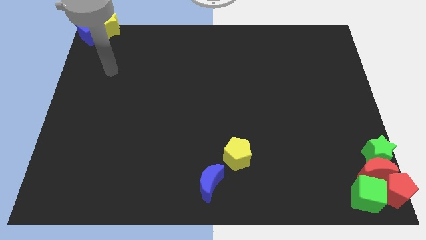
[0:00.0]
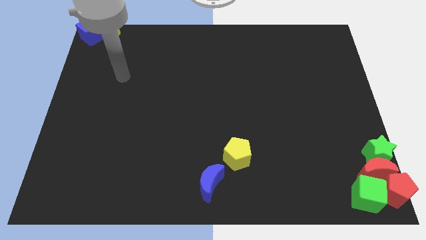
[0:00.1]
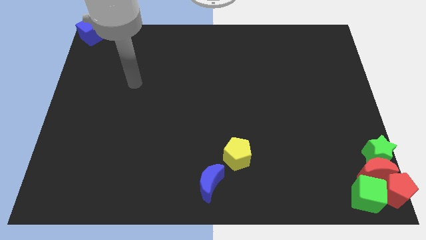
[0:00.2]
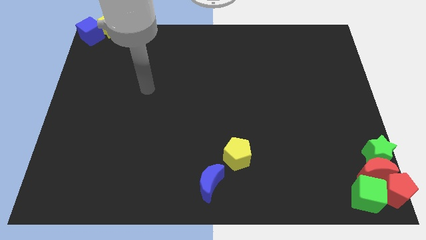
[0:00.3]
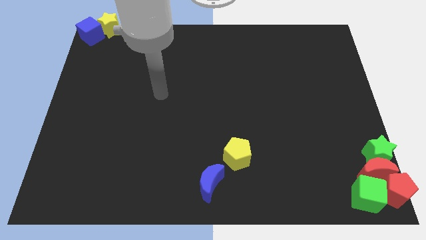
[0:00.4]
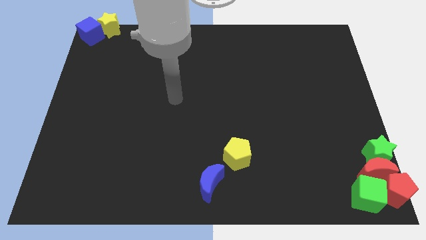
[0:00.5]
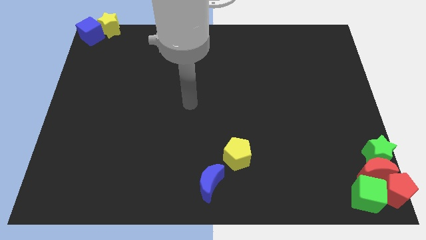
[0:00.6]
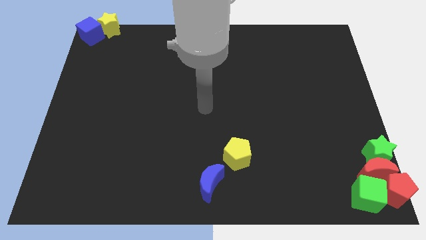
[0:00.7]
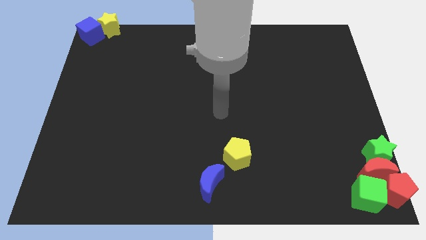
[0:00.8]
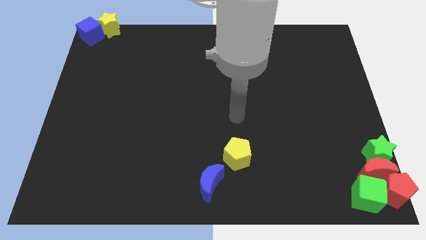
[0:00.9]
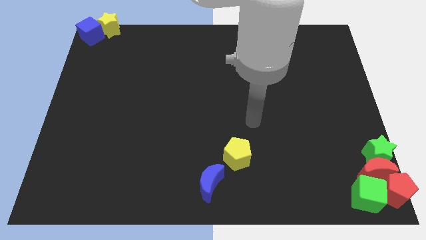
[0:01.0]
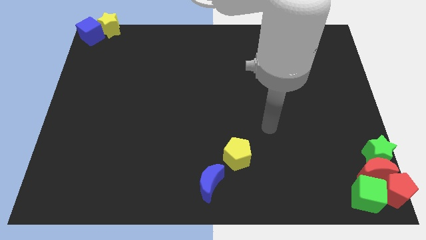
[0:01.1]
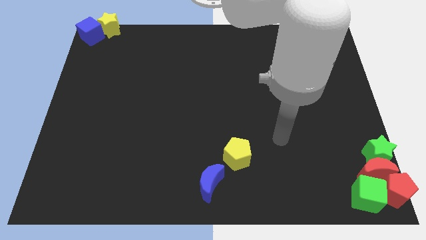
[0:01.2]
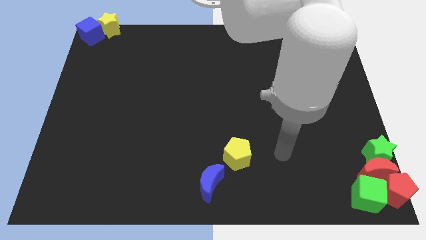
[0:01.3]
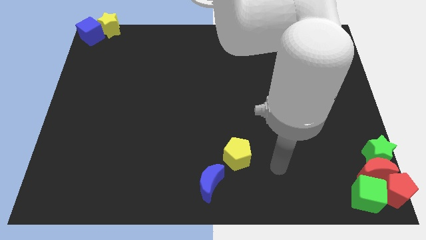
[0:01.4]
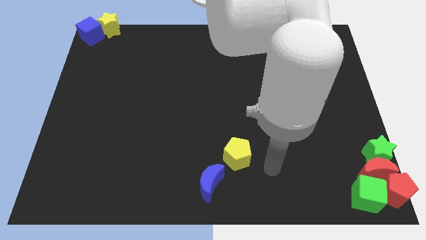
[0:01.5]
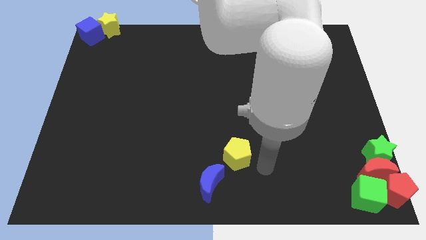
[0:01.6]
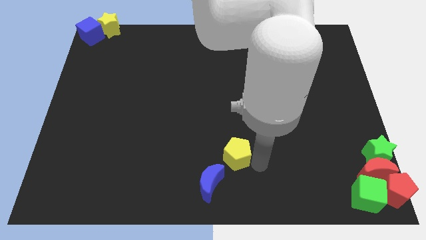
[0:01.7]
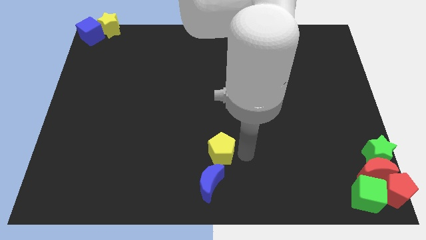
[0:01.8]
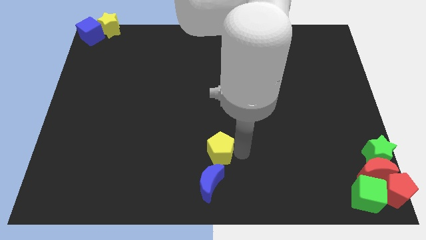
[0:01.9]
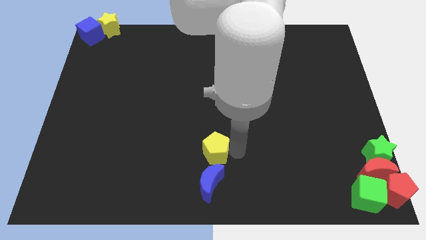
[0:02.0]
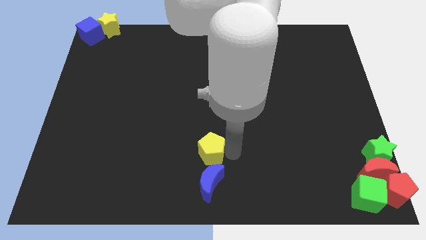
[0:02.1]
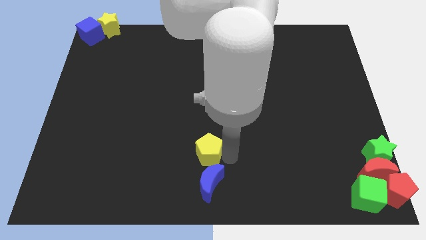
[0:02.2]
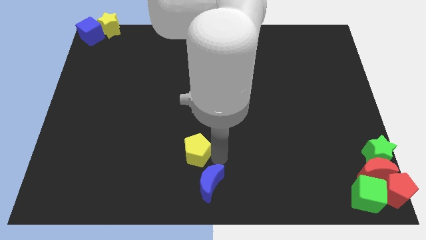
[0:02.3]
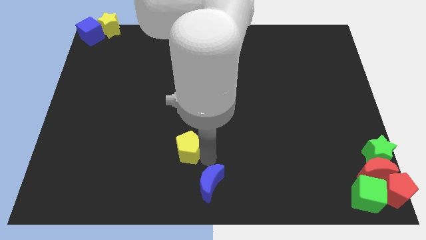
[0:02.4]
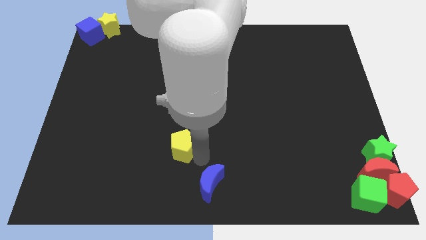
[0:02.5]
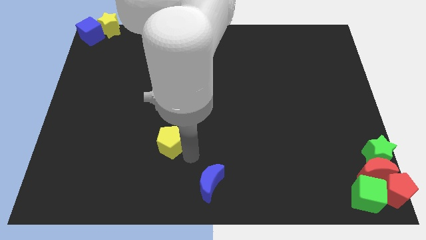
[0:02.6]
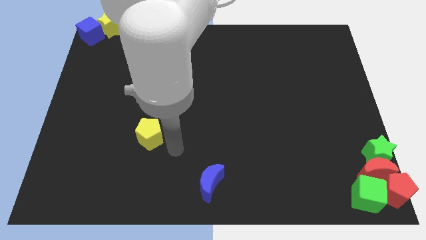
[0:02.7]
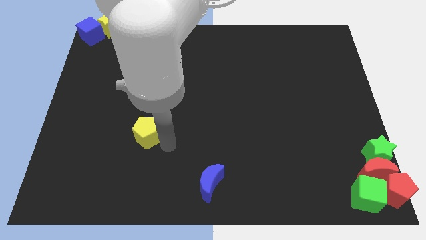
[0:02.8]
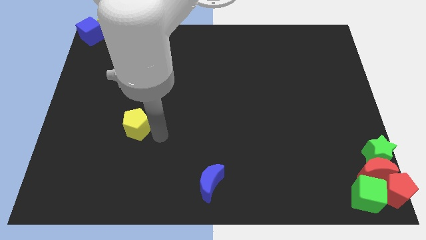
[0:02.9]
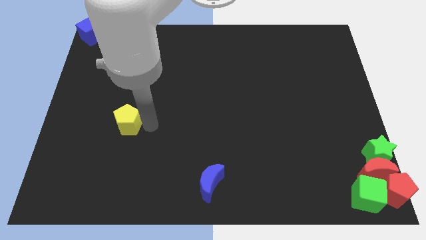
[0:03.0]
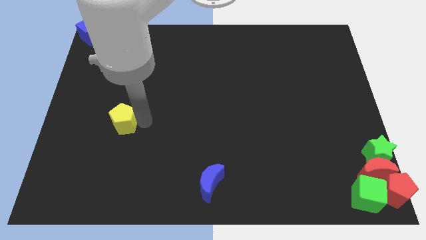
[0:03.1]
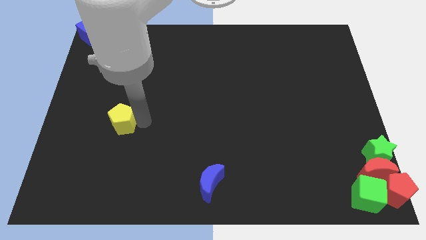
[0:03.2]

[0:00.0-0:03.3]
push the yellow pentagon away from the blue crescent

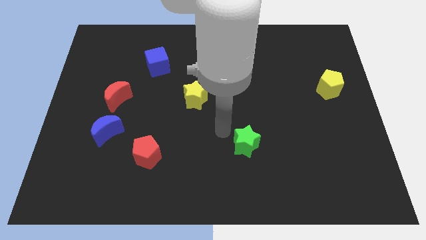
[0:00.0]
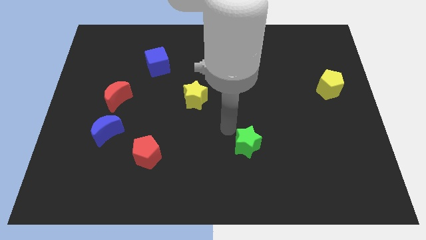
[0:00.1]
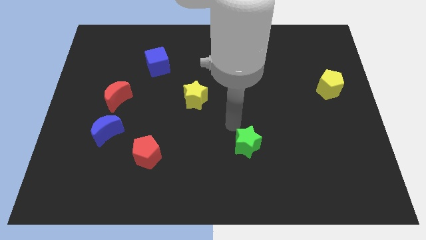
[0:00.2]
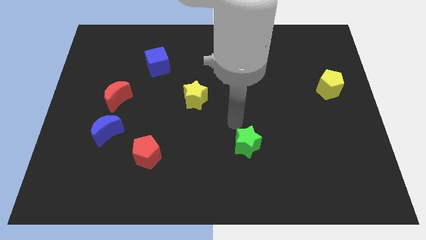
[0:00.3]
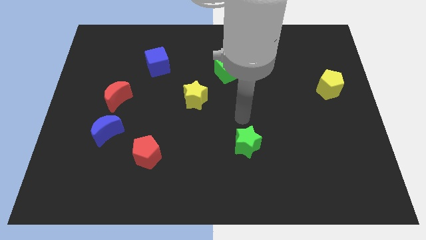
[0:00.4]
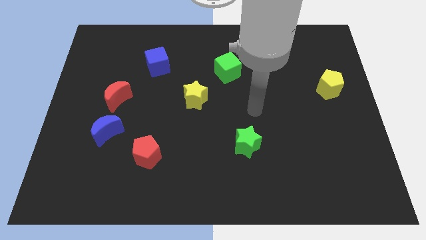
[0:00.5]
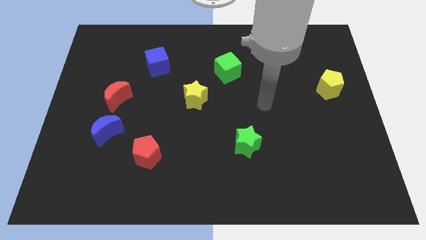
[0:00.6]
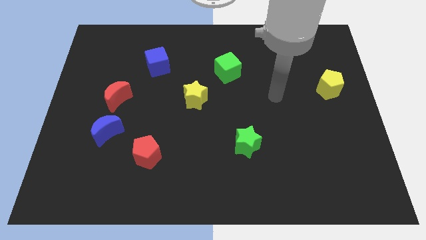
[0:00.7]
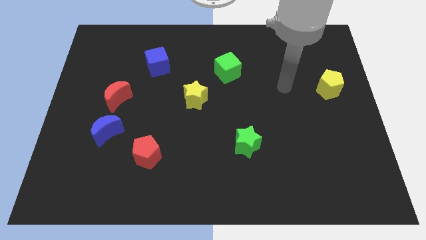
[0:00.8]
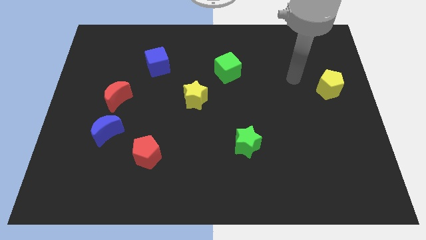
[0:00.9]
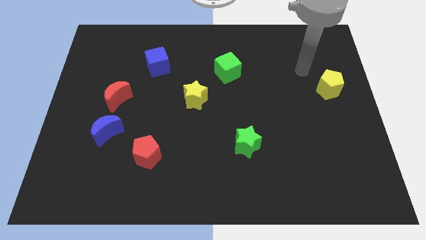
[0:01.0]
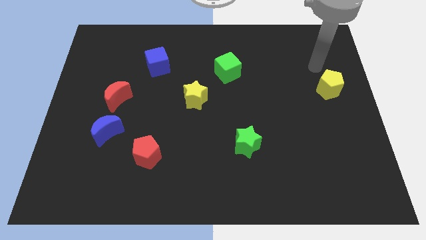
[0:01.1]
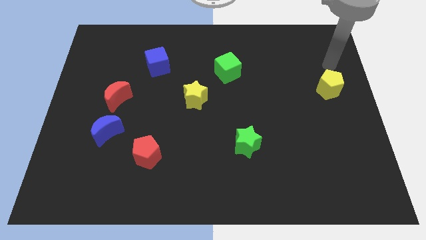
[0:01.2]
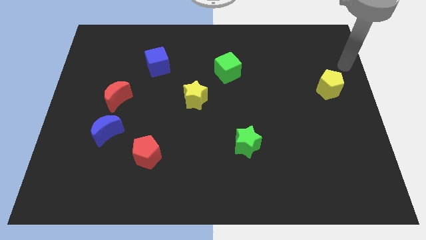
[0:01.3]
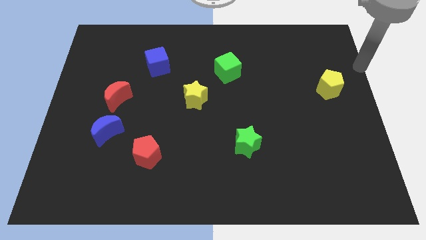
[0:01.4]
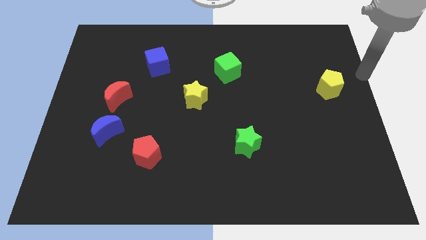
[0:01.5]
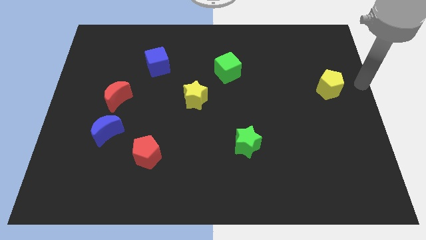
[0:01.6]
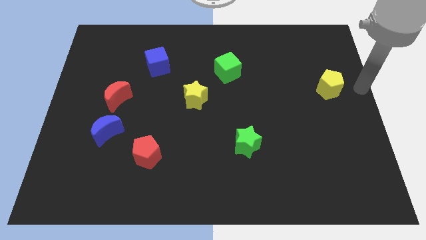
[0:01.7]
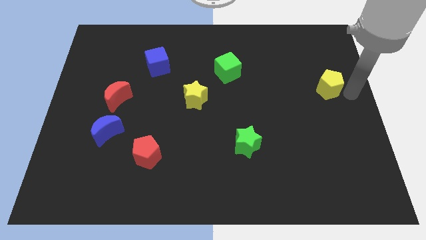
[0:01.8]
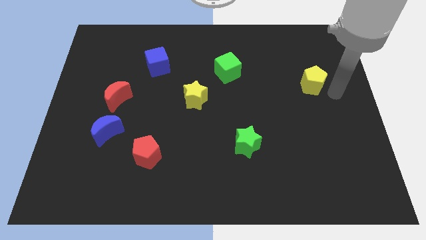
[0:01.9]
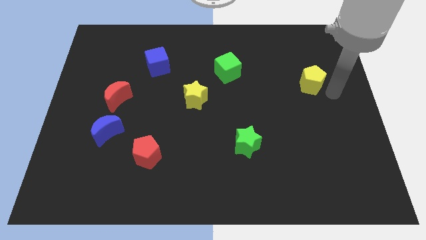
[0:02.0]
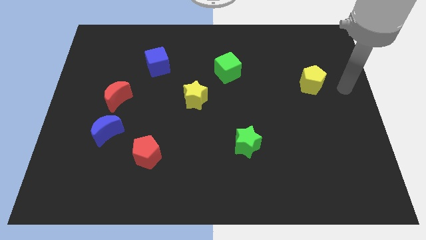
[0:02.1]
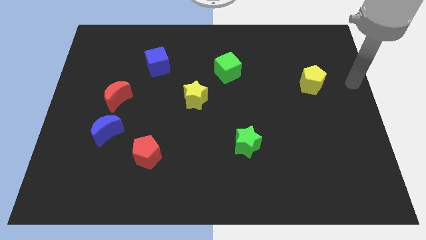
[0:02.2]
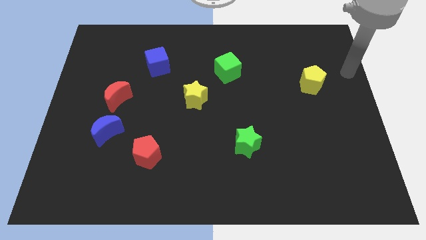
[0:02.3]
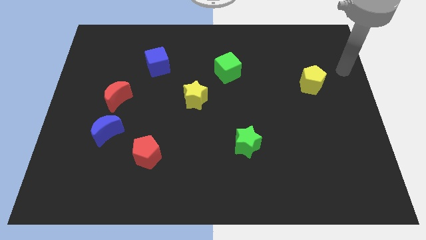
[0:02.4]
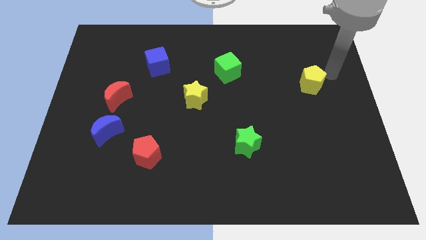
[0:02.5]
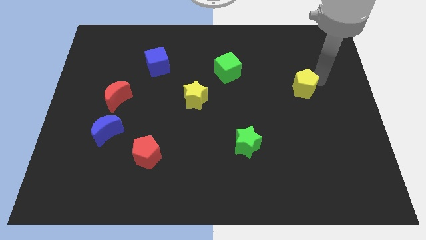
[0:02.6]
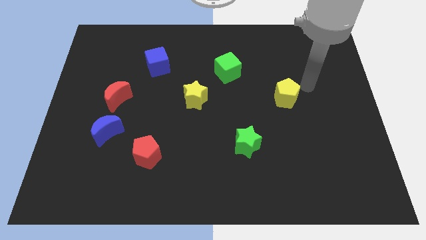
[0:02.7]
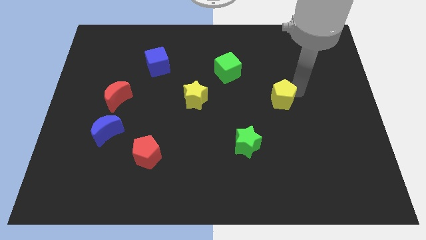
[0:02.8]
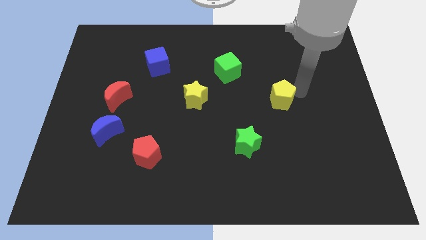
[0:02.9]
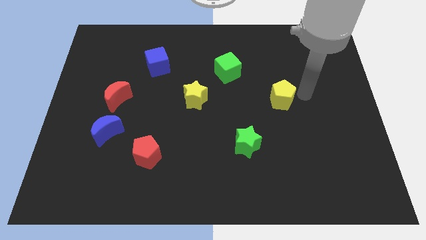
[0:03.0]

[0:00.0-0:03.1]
place the yellow pentagon horizontally to the right side of the yellow star

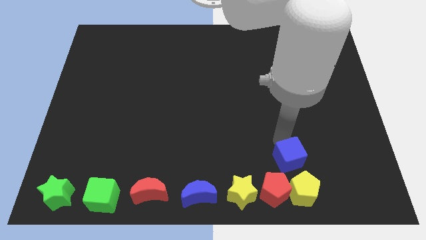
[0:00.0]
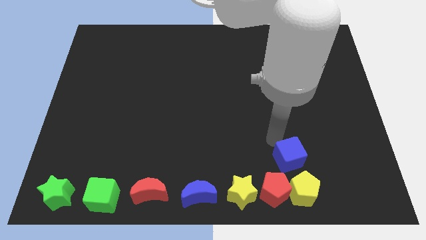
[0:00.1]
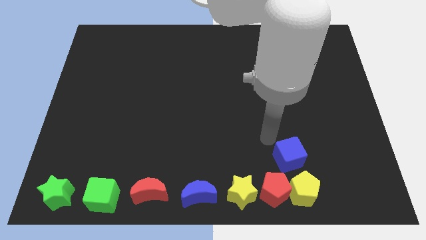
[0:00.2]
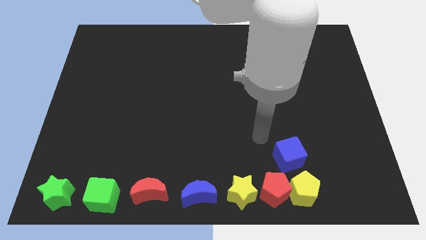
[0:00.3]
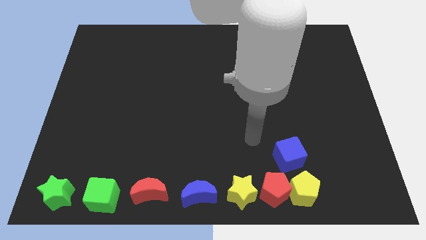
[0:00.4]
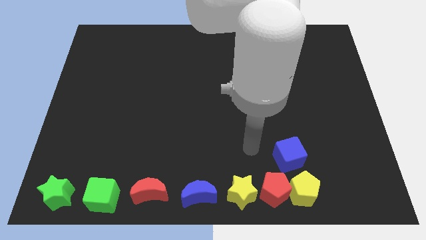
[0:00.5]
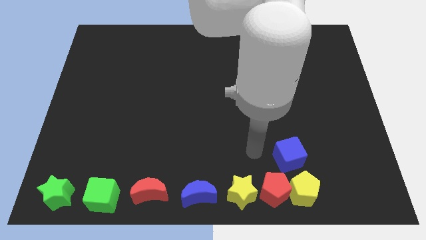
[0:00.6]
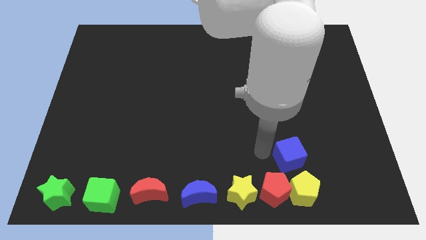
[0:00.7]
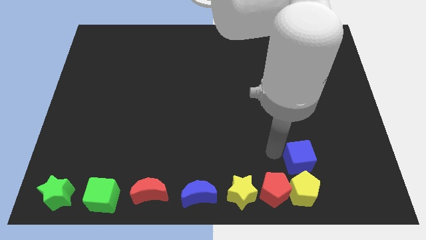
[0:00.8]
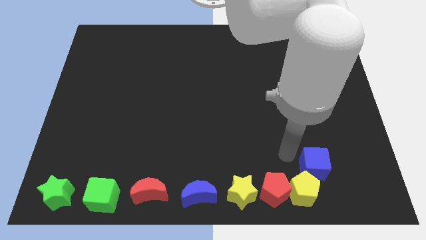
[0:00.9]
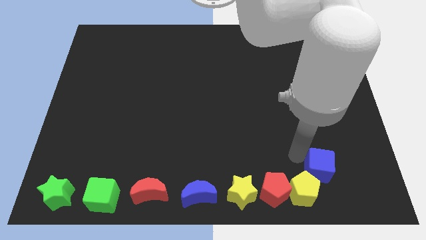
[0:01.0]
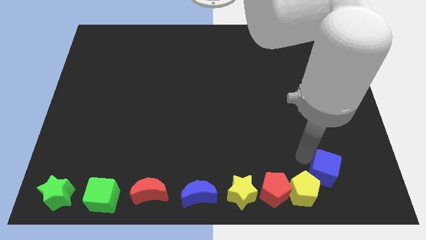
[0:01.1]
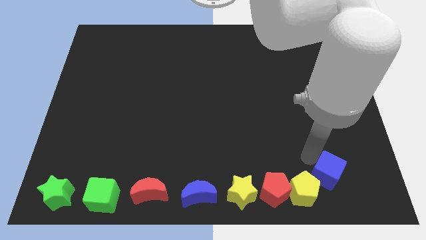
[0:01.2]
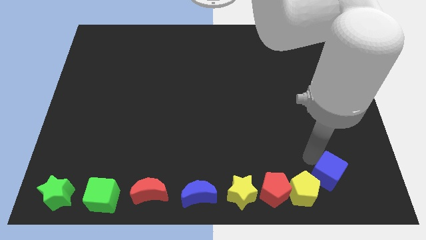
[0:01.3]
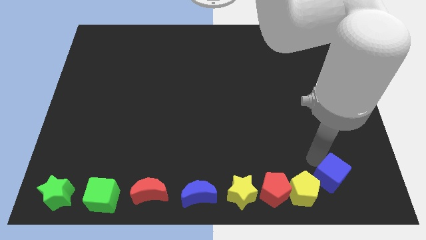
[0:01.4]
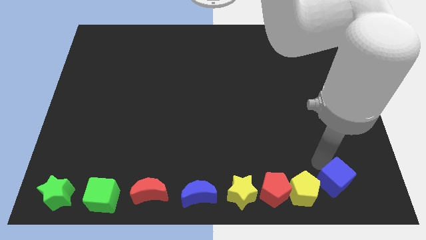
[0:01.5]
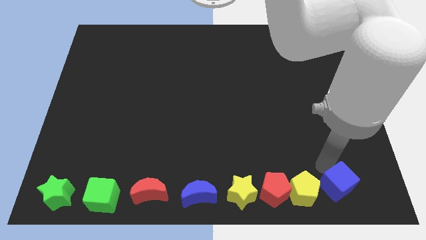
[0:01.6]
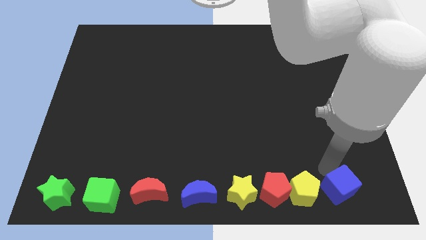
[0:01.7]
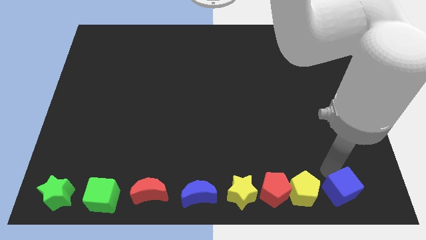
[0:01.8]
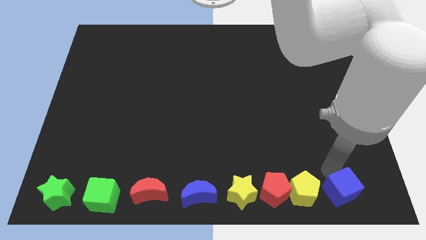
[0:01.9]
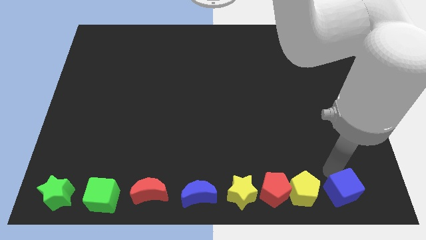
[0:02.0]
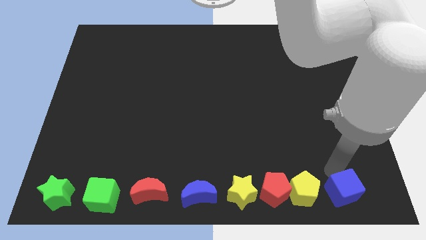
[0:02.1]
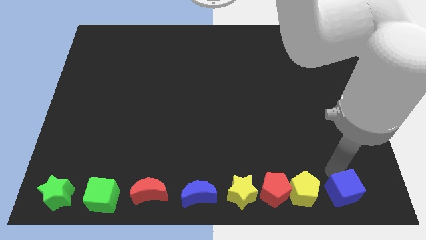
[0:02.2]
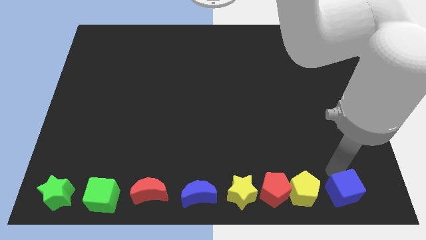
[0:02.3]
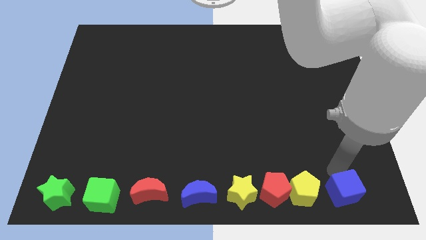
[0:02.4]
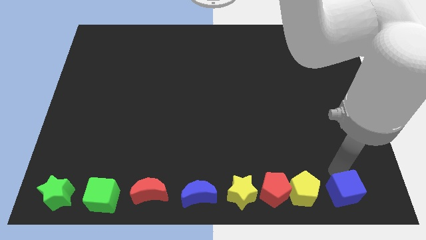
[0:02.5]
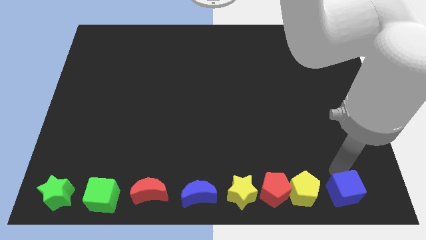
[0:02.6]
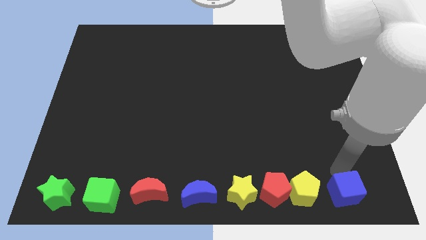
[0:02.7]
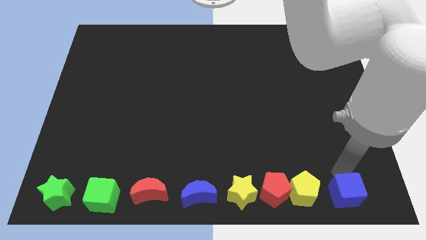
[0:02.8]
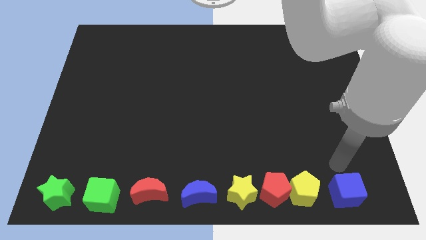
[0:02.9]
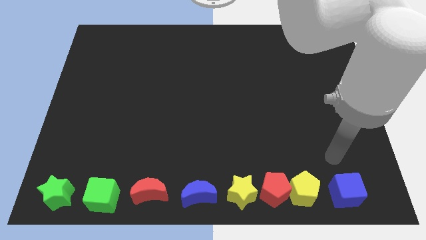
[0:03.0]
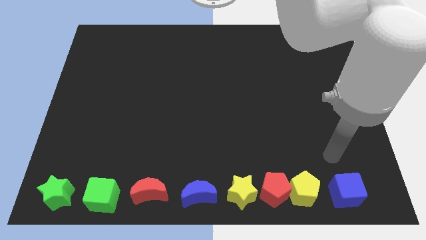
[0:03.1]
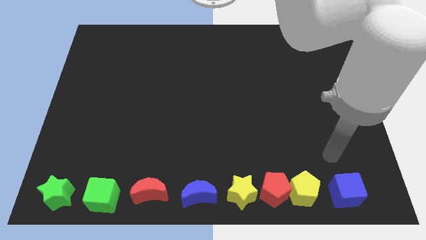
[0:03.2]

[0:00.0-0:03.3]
place the blue cube right side of the yellow pentagon
